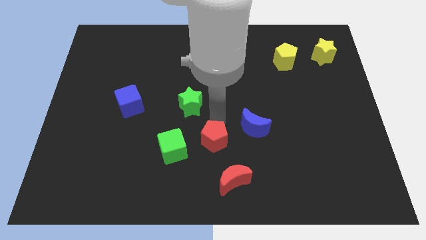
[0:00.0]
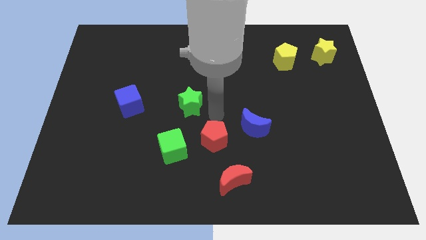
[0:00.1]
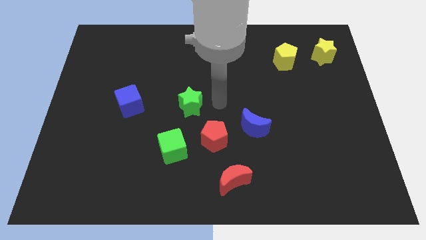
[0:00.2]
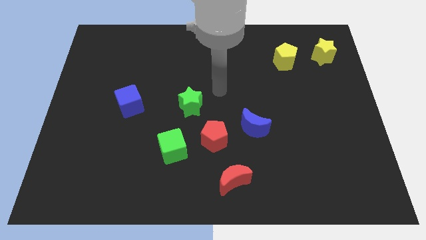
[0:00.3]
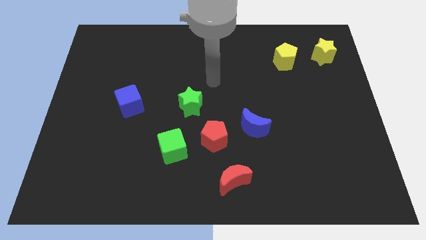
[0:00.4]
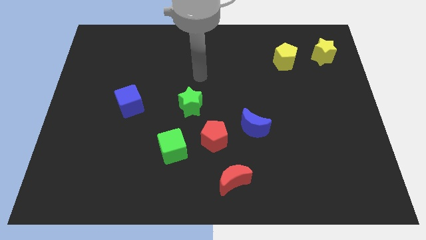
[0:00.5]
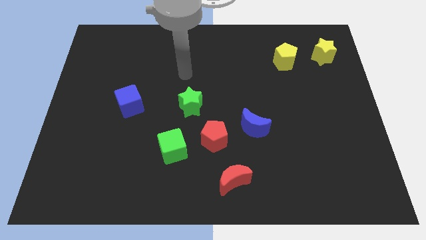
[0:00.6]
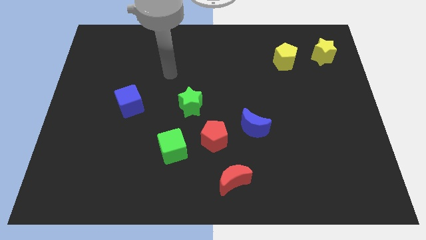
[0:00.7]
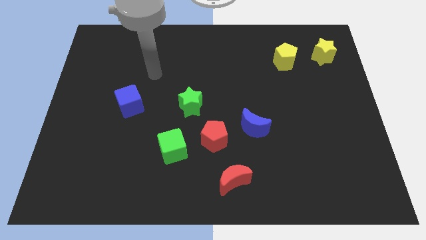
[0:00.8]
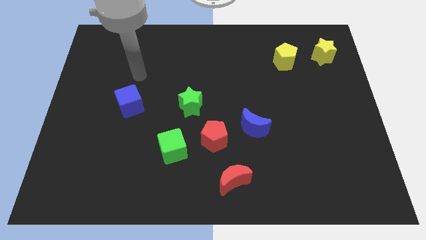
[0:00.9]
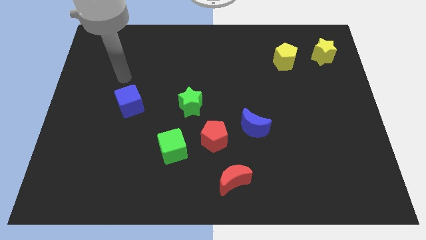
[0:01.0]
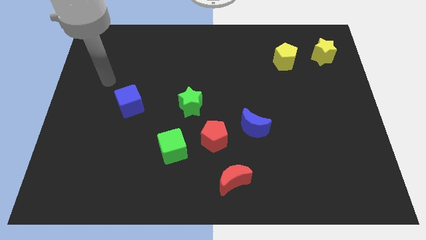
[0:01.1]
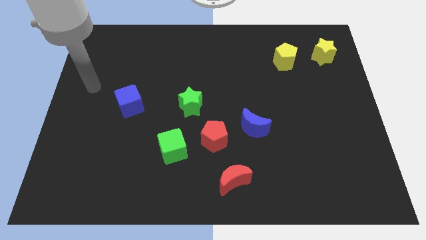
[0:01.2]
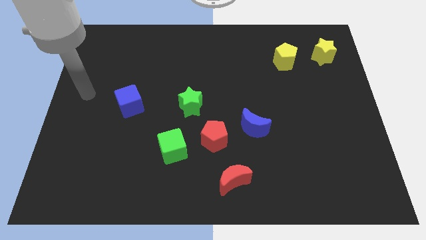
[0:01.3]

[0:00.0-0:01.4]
move the arm away from the red pentagon

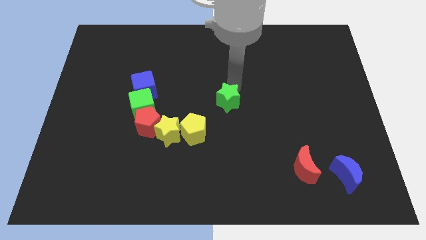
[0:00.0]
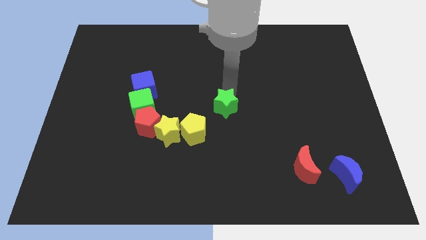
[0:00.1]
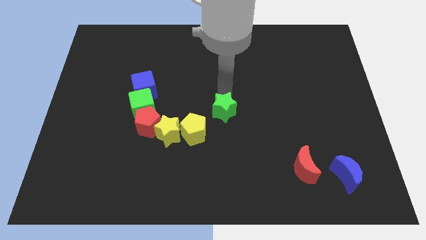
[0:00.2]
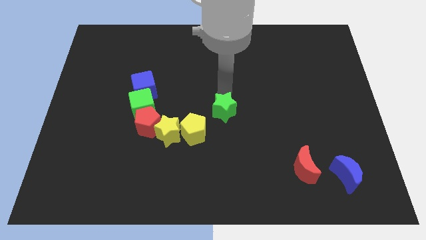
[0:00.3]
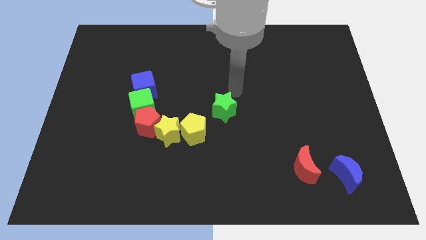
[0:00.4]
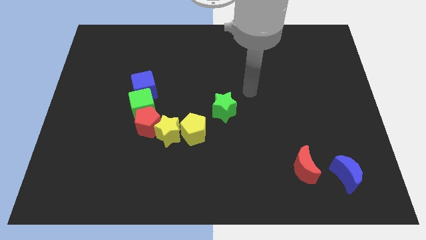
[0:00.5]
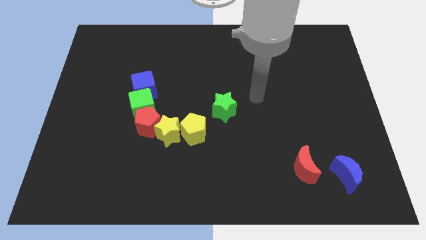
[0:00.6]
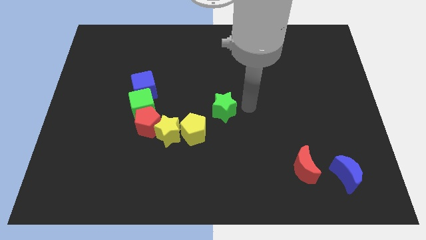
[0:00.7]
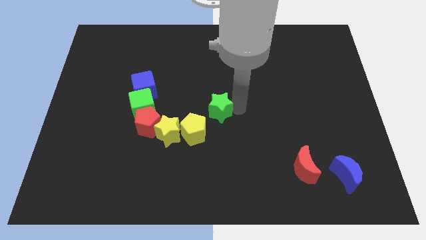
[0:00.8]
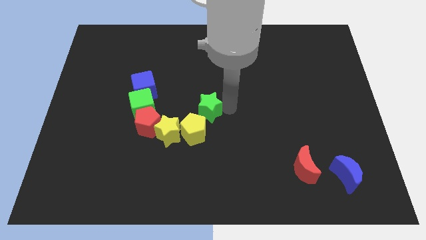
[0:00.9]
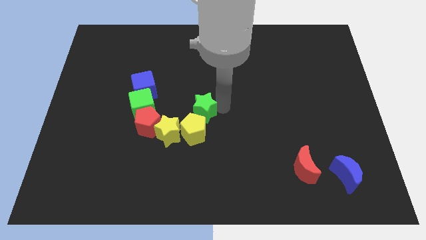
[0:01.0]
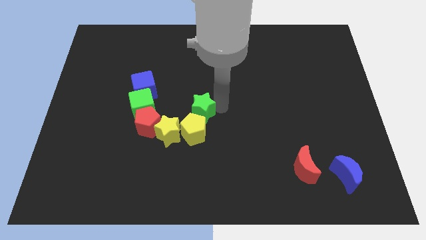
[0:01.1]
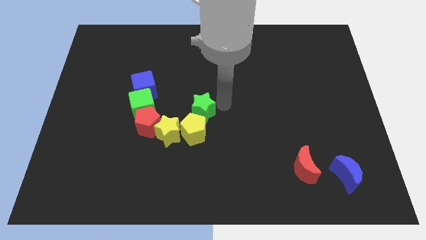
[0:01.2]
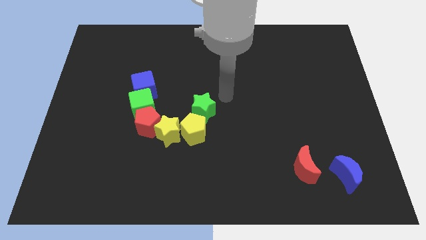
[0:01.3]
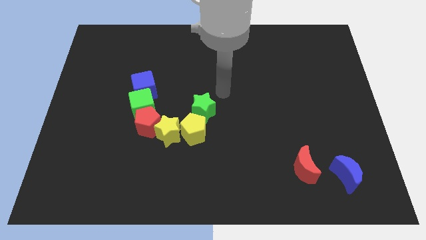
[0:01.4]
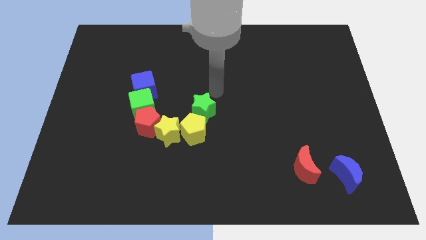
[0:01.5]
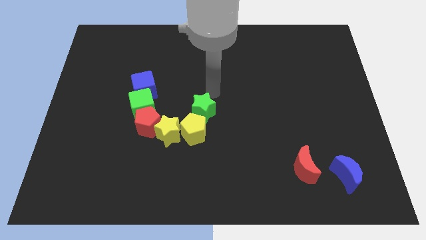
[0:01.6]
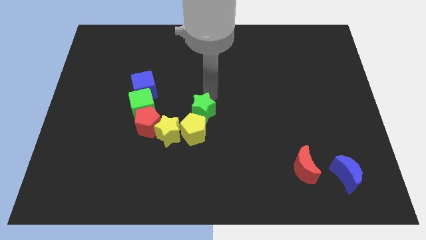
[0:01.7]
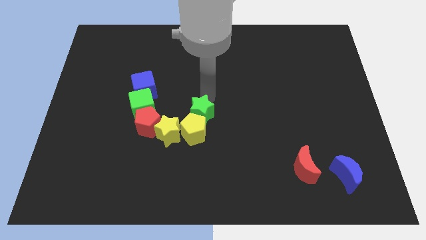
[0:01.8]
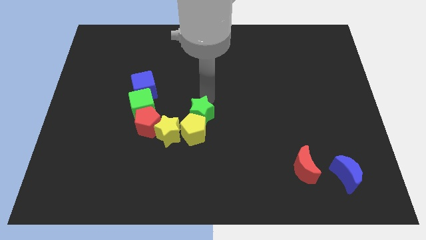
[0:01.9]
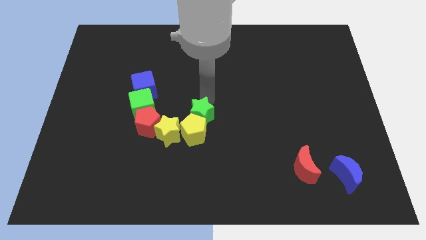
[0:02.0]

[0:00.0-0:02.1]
place green star into yellow pentagon

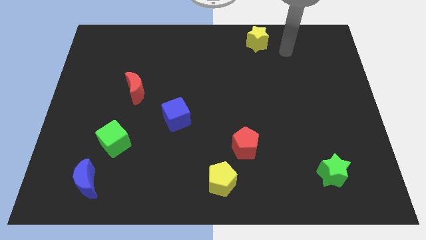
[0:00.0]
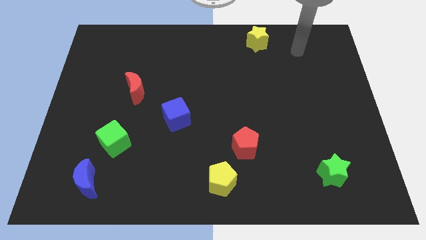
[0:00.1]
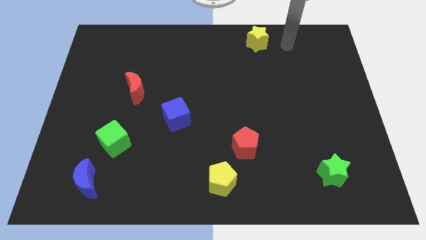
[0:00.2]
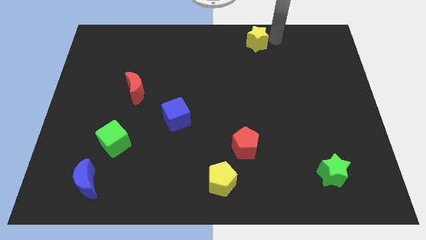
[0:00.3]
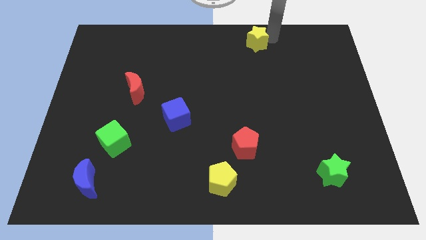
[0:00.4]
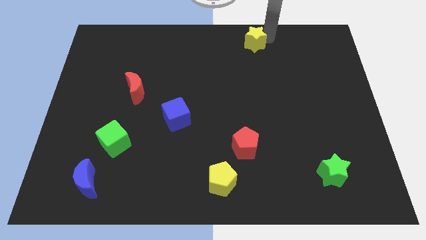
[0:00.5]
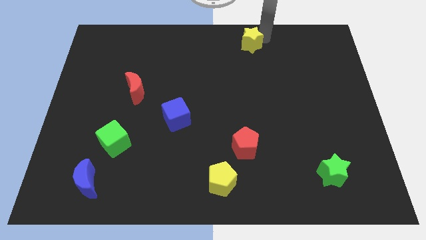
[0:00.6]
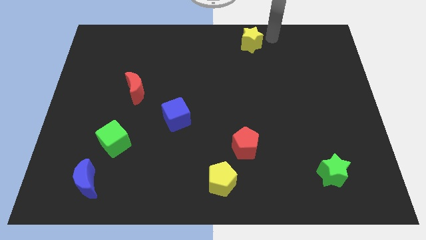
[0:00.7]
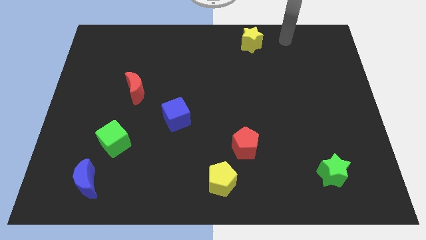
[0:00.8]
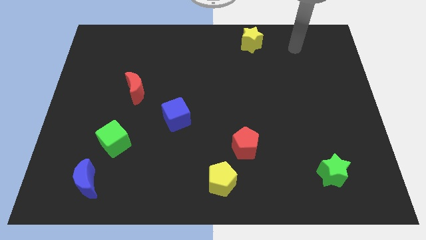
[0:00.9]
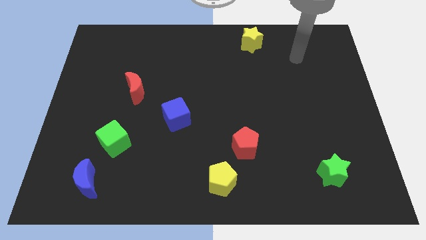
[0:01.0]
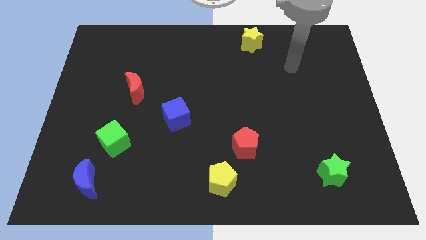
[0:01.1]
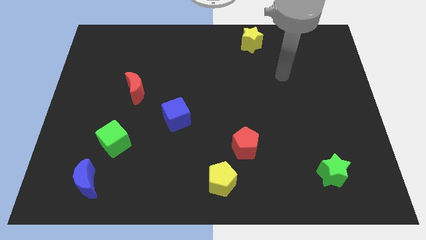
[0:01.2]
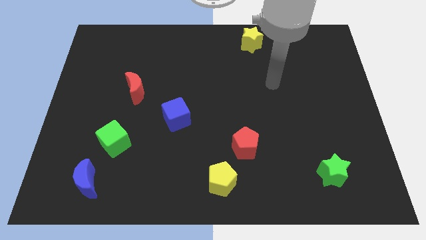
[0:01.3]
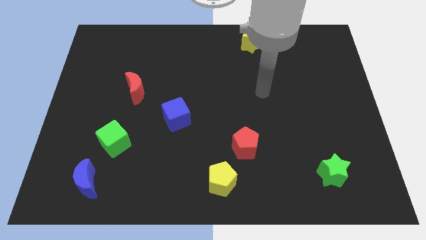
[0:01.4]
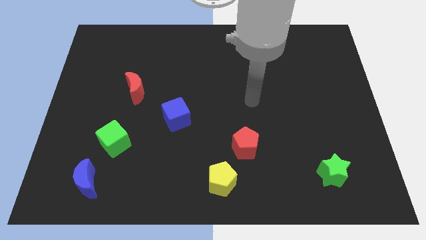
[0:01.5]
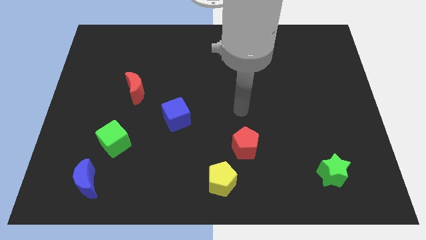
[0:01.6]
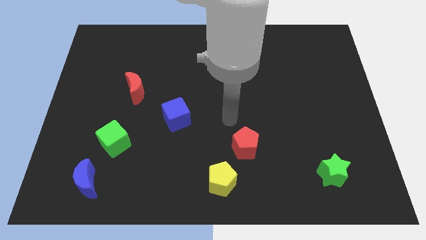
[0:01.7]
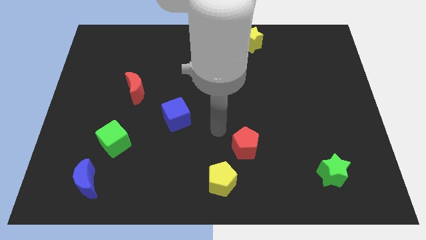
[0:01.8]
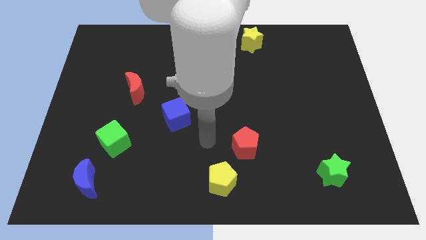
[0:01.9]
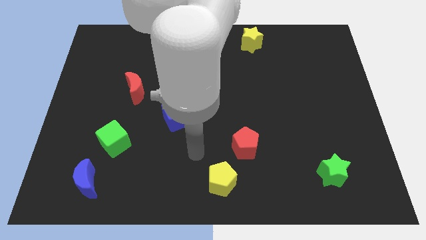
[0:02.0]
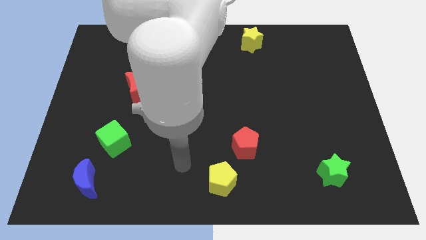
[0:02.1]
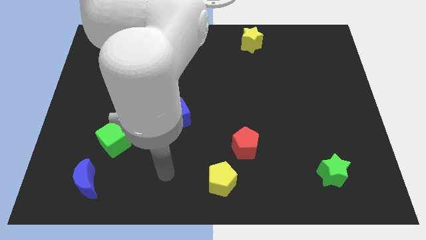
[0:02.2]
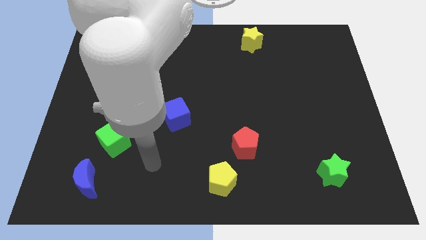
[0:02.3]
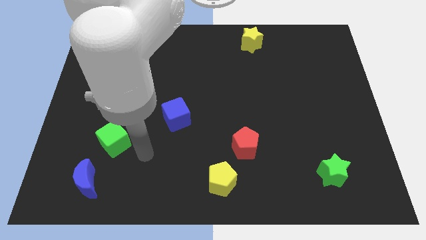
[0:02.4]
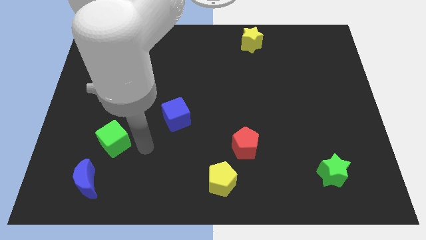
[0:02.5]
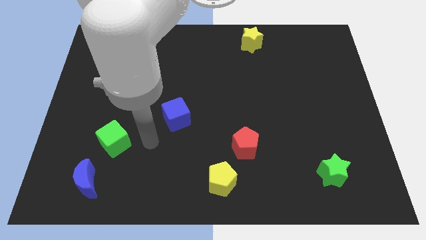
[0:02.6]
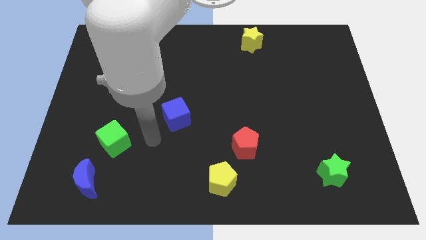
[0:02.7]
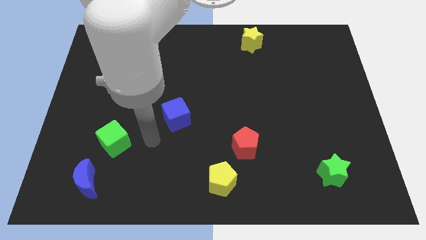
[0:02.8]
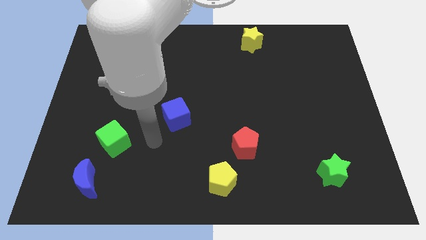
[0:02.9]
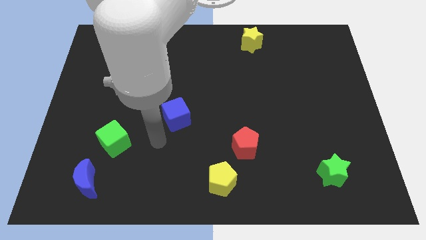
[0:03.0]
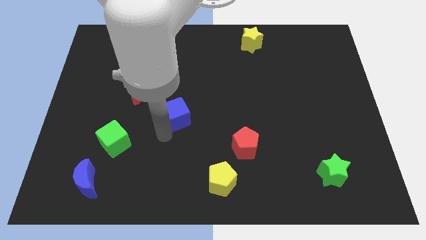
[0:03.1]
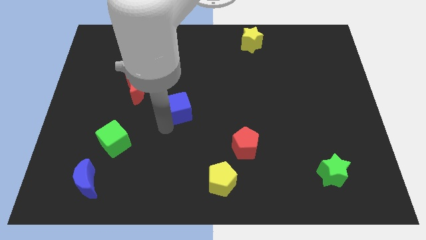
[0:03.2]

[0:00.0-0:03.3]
tap the bottom side of the table

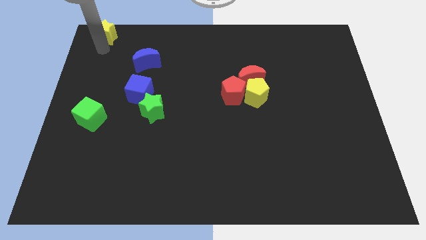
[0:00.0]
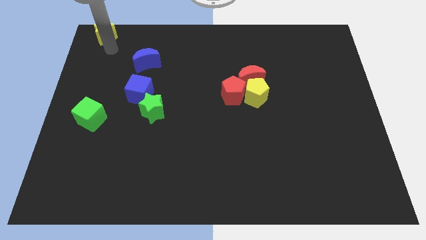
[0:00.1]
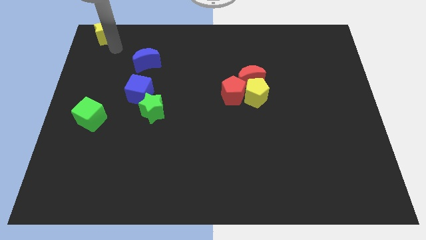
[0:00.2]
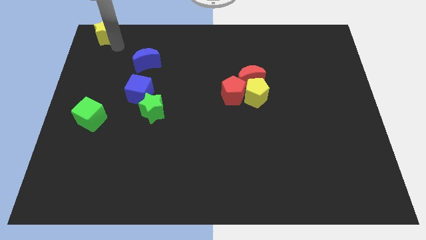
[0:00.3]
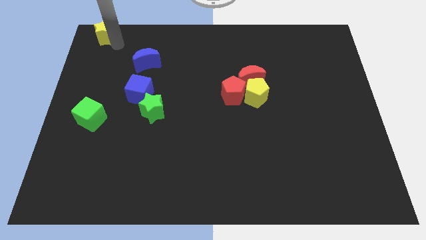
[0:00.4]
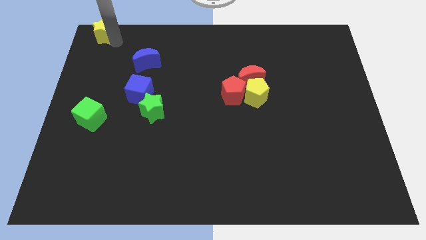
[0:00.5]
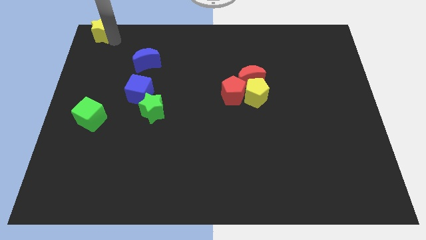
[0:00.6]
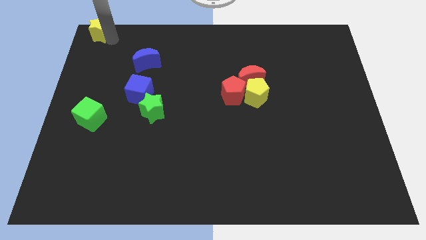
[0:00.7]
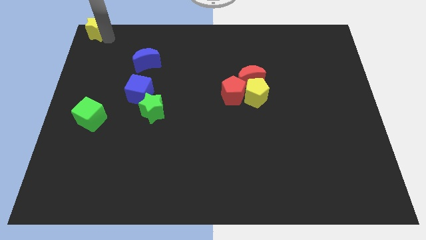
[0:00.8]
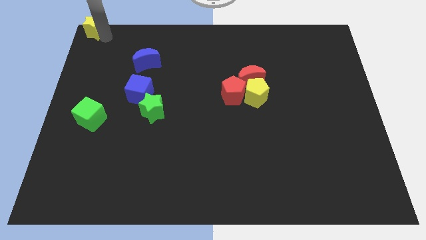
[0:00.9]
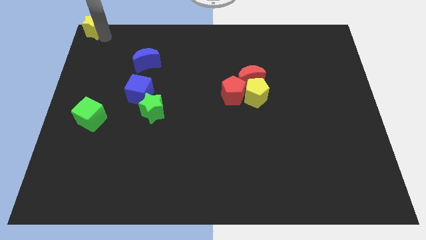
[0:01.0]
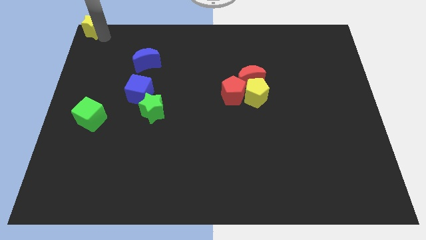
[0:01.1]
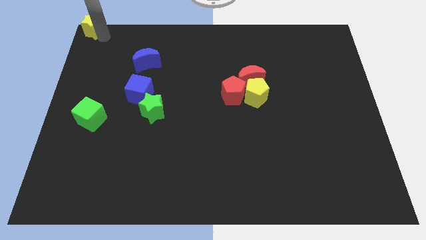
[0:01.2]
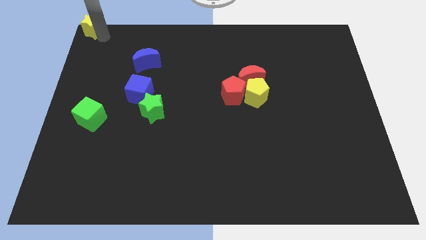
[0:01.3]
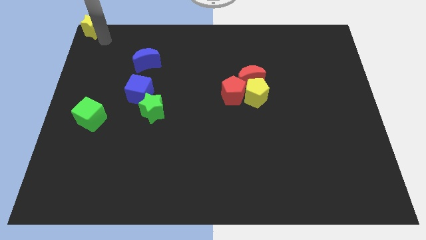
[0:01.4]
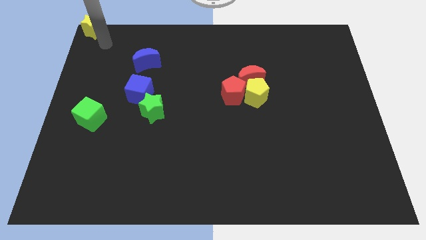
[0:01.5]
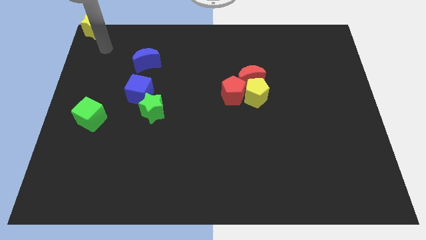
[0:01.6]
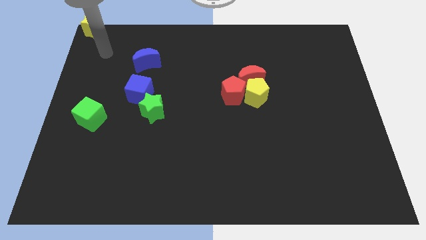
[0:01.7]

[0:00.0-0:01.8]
push the yellow star to the top left corner

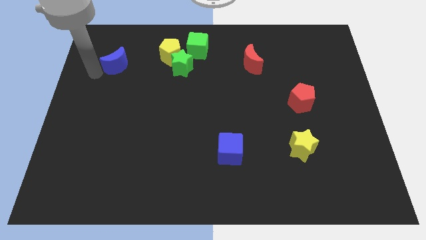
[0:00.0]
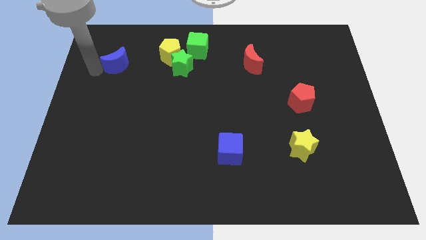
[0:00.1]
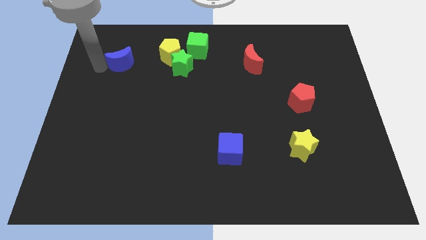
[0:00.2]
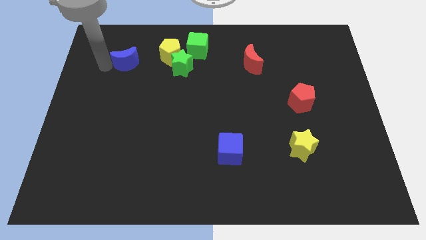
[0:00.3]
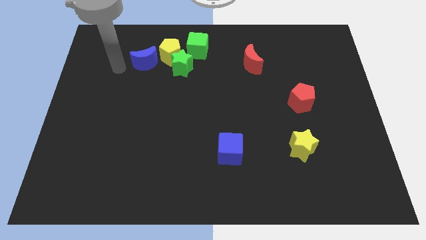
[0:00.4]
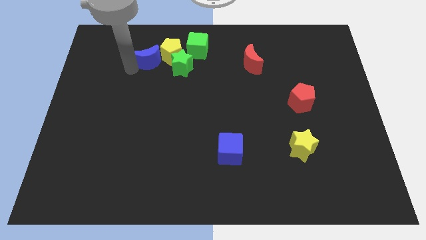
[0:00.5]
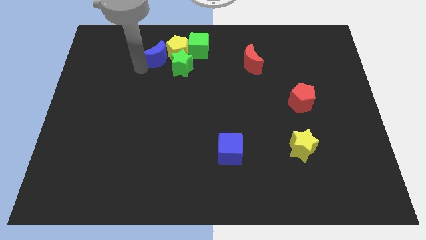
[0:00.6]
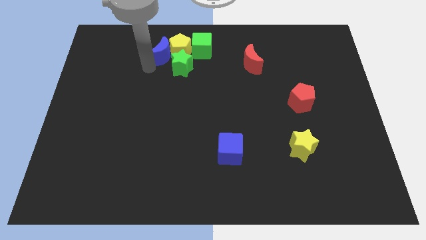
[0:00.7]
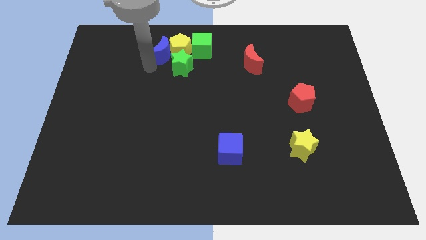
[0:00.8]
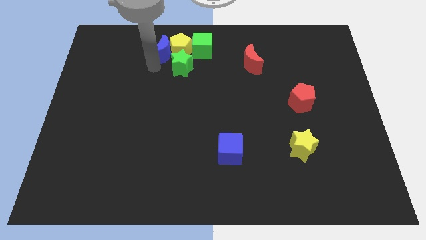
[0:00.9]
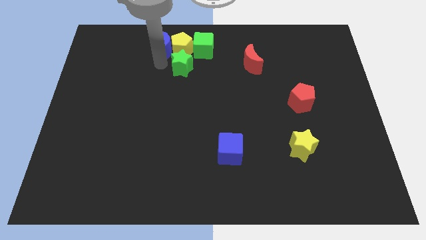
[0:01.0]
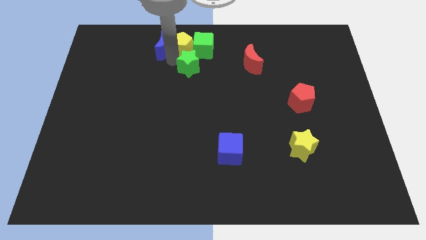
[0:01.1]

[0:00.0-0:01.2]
move the blue crescent to the left of the yellow pentagon
